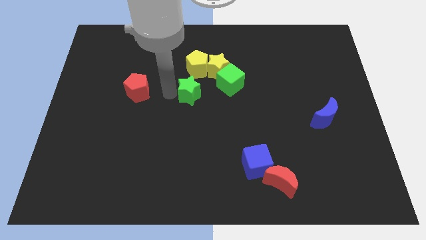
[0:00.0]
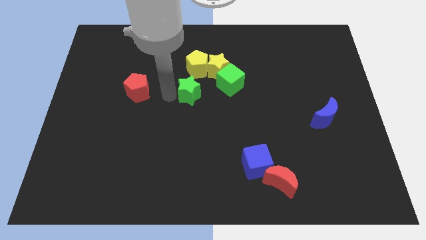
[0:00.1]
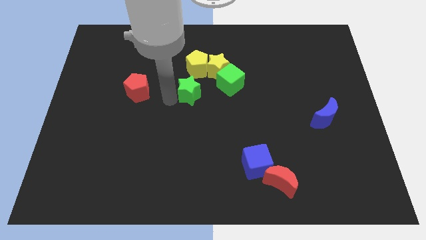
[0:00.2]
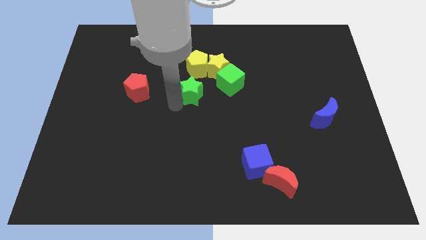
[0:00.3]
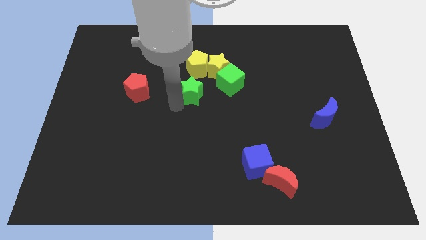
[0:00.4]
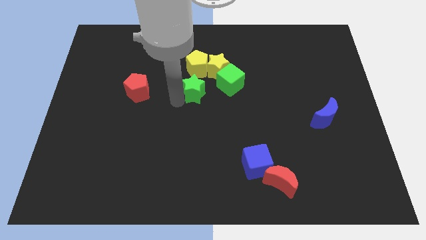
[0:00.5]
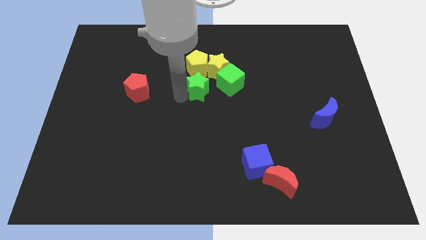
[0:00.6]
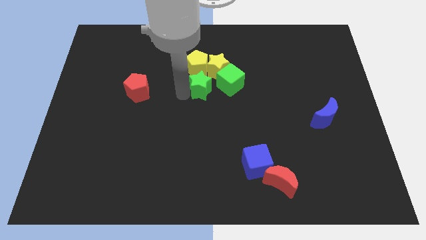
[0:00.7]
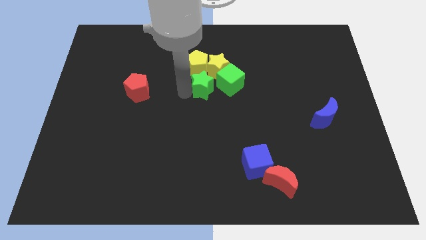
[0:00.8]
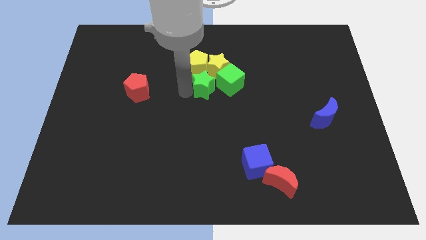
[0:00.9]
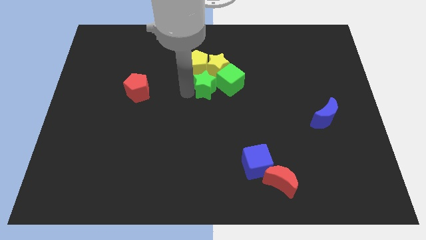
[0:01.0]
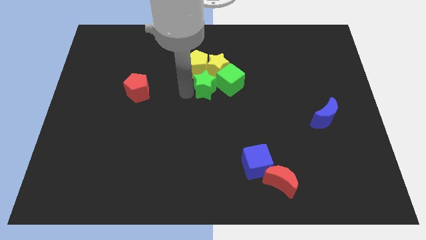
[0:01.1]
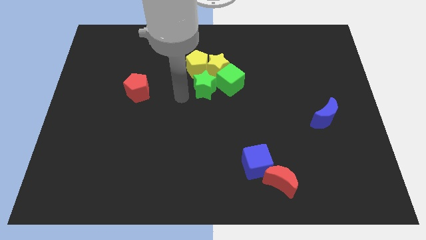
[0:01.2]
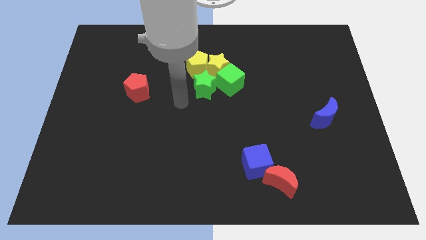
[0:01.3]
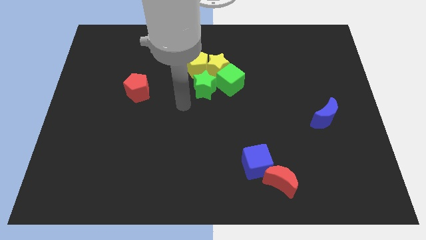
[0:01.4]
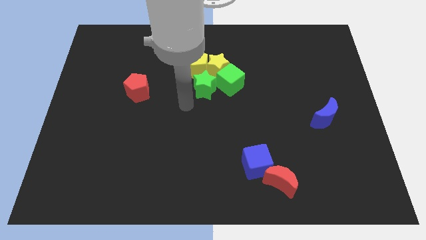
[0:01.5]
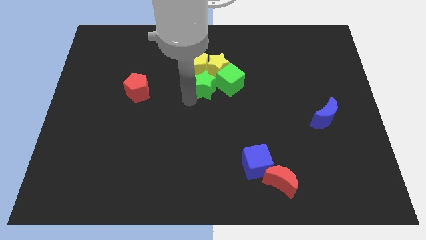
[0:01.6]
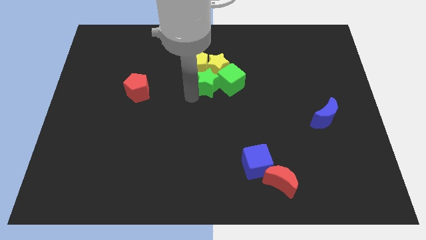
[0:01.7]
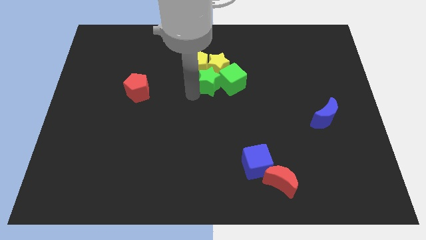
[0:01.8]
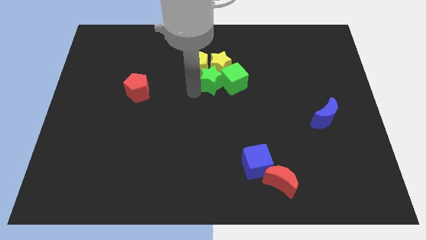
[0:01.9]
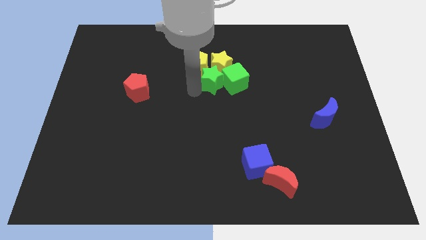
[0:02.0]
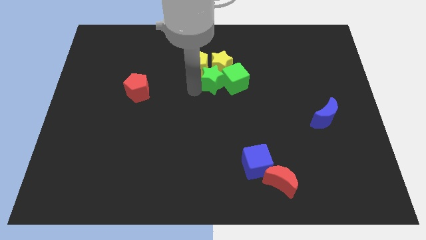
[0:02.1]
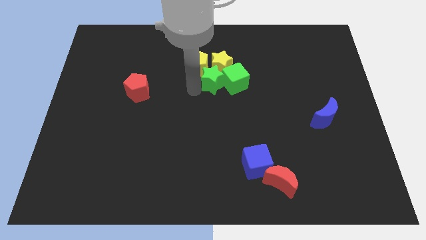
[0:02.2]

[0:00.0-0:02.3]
move the green star to the left side of the green cube

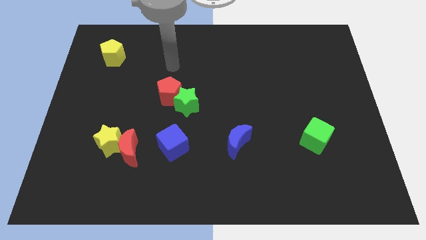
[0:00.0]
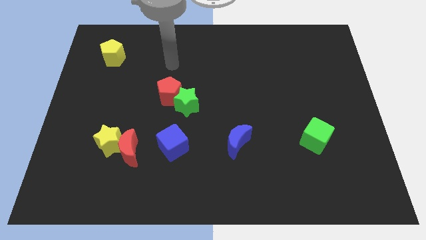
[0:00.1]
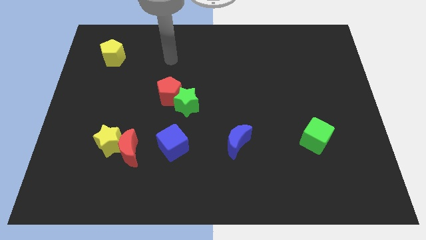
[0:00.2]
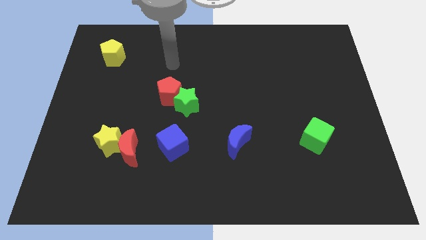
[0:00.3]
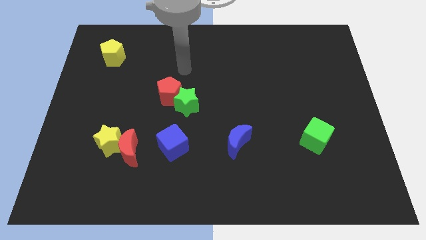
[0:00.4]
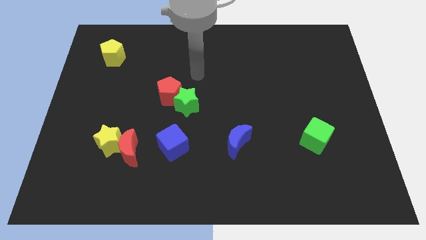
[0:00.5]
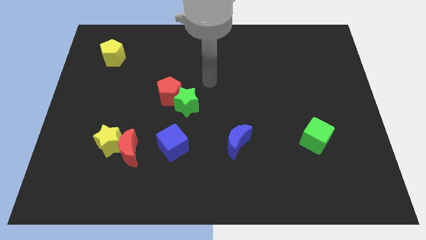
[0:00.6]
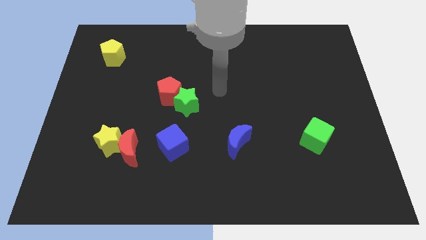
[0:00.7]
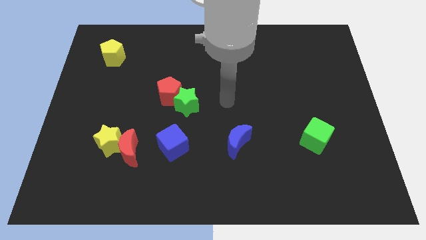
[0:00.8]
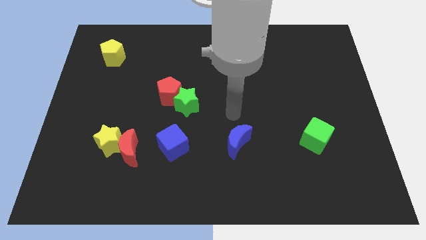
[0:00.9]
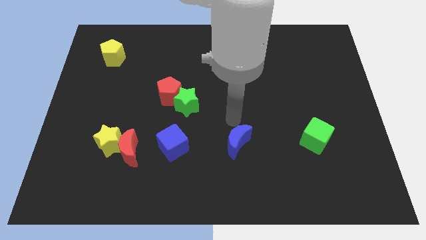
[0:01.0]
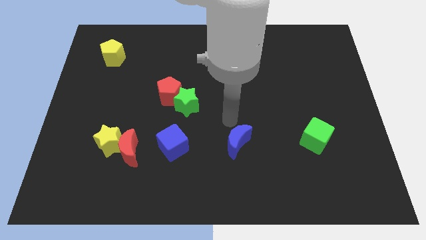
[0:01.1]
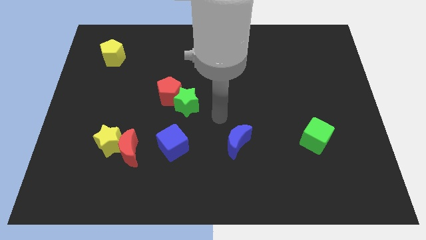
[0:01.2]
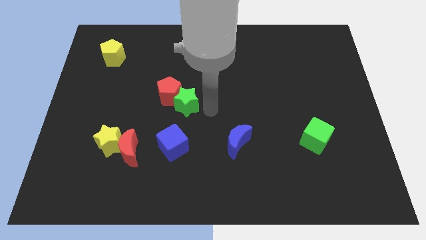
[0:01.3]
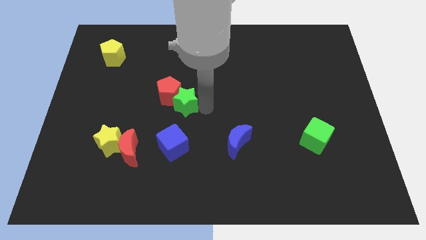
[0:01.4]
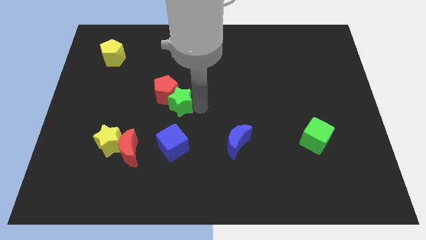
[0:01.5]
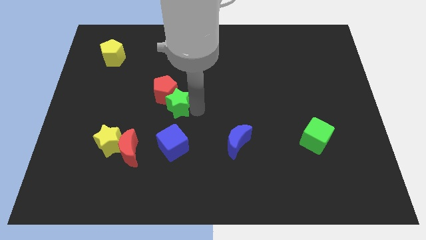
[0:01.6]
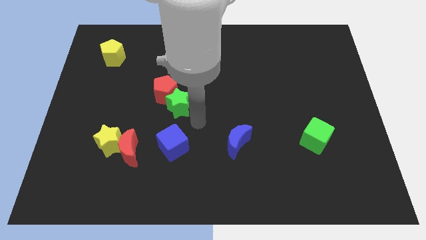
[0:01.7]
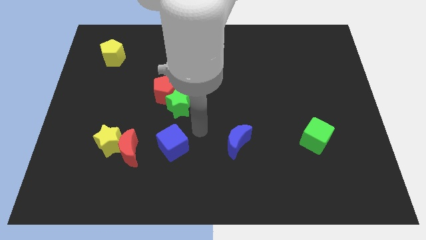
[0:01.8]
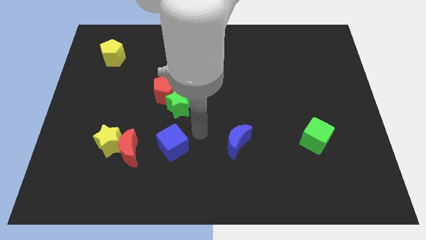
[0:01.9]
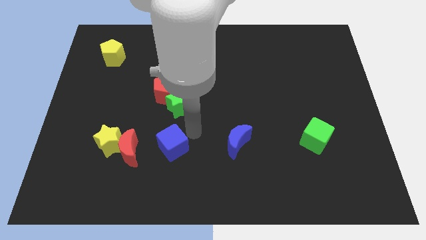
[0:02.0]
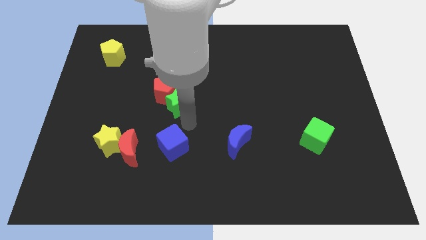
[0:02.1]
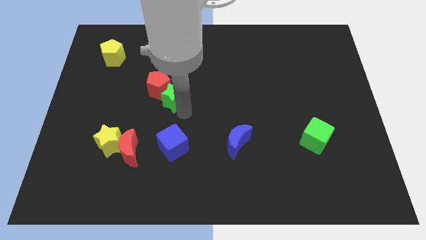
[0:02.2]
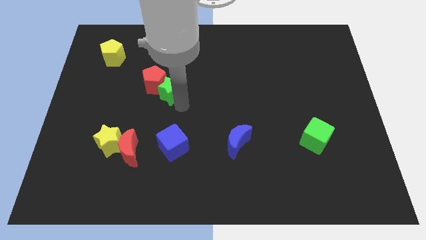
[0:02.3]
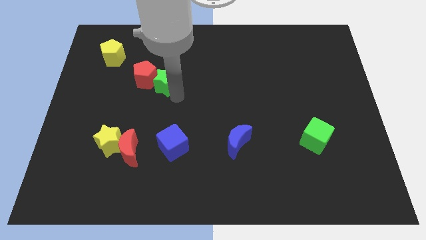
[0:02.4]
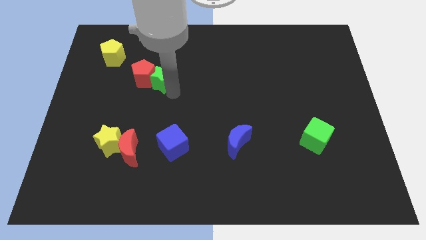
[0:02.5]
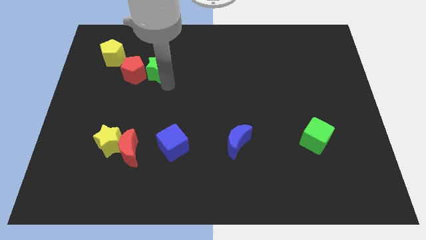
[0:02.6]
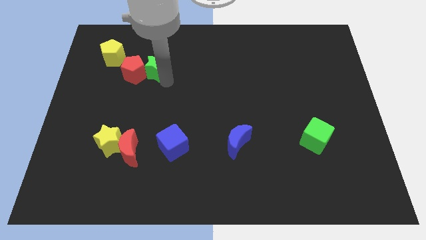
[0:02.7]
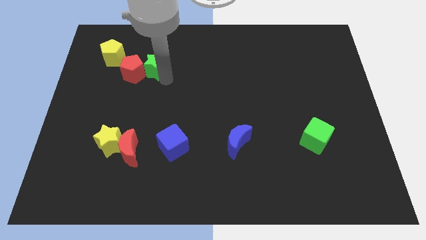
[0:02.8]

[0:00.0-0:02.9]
move the green star along with the red pentagon towards the bottom of the yellow pentagon

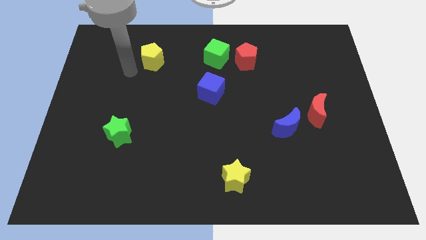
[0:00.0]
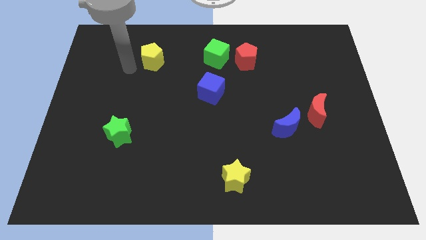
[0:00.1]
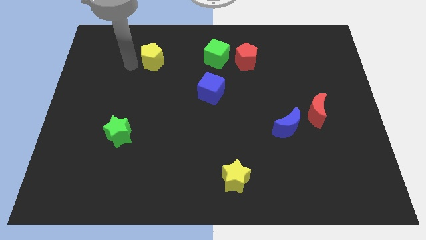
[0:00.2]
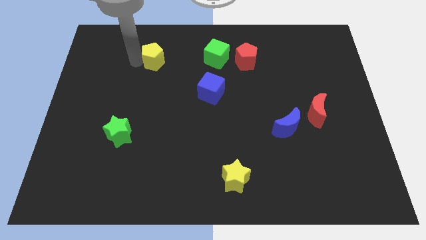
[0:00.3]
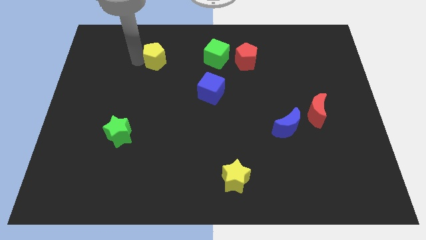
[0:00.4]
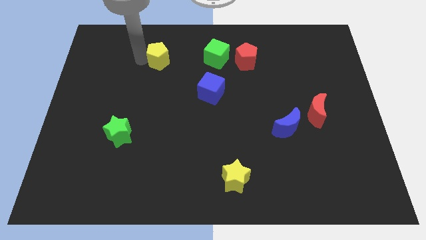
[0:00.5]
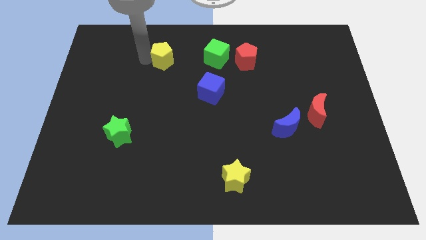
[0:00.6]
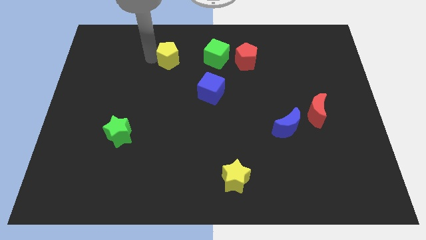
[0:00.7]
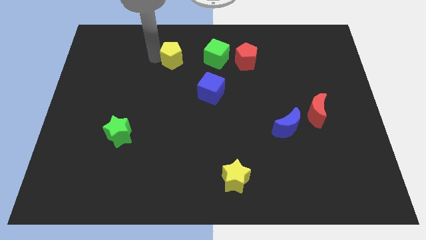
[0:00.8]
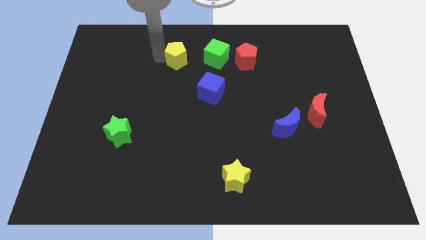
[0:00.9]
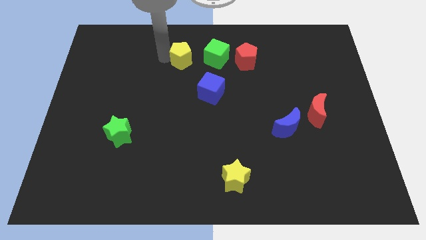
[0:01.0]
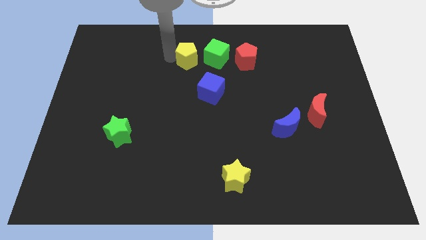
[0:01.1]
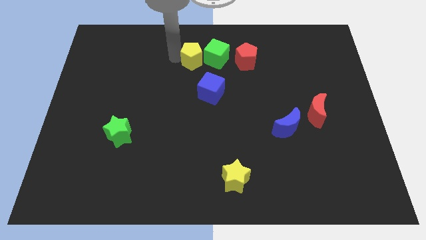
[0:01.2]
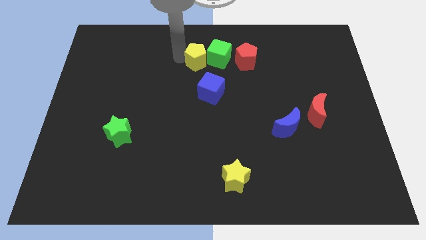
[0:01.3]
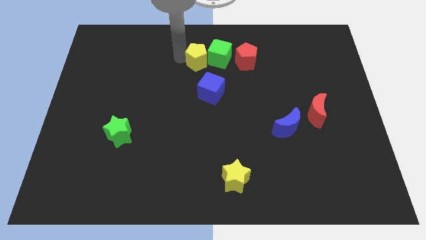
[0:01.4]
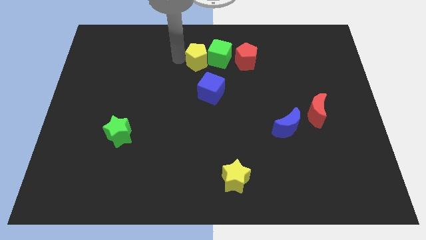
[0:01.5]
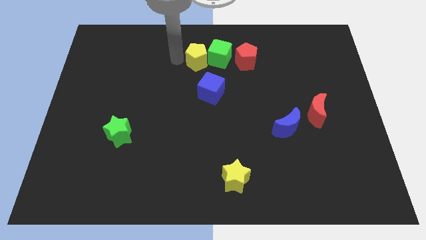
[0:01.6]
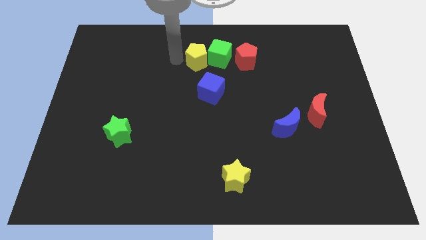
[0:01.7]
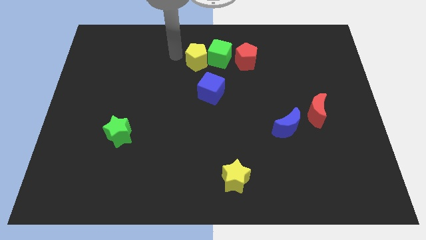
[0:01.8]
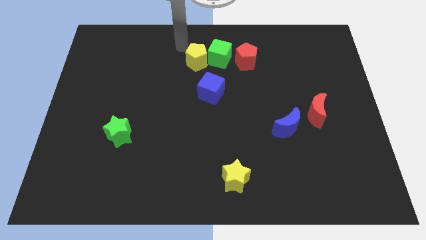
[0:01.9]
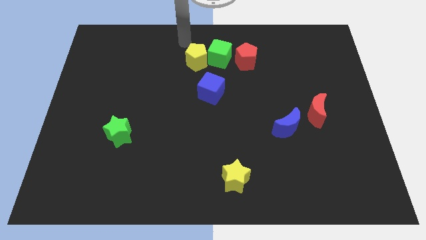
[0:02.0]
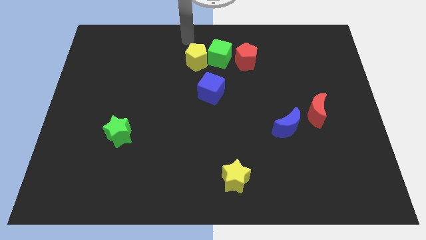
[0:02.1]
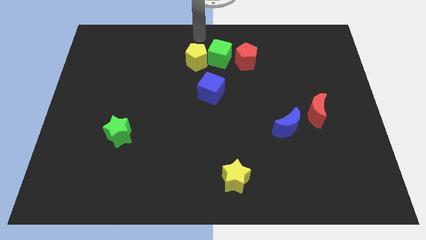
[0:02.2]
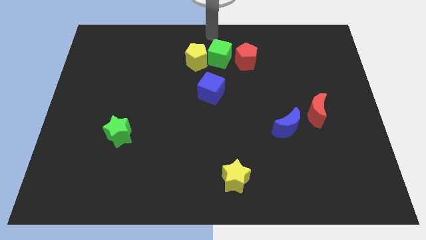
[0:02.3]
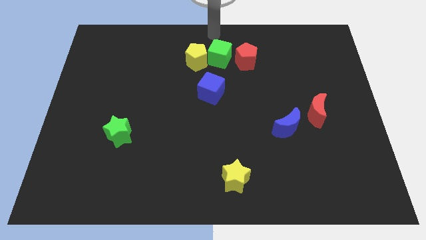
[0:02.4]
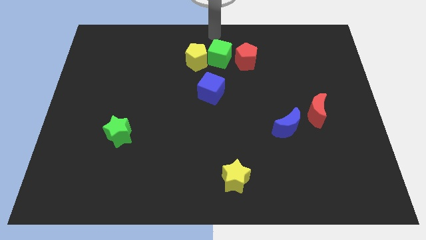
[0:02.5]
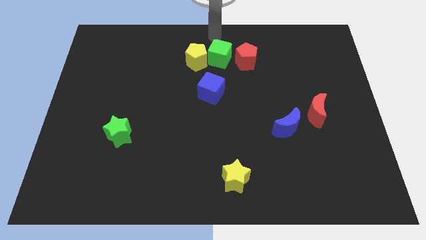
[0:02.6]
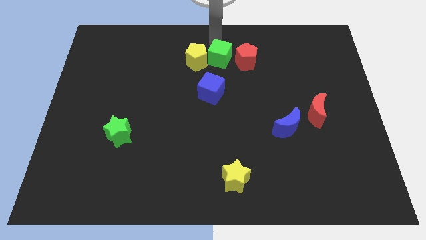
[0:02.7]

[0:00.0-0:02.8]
push the yellow pentagon into green cube

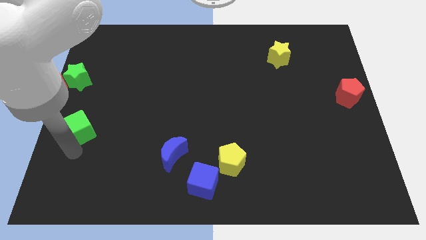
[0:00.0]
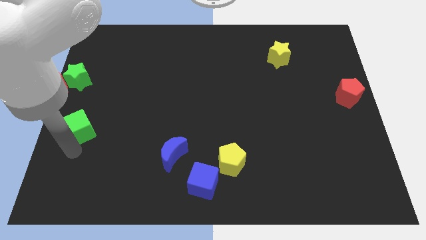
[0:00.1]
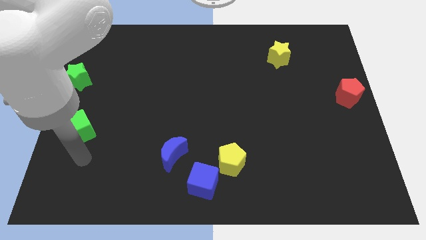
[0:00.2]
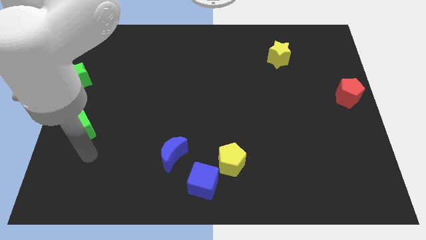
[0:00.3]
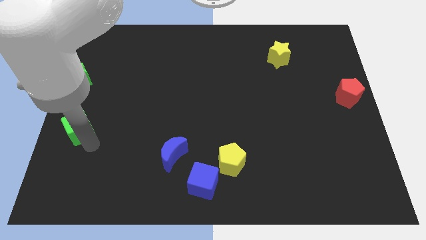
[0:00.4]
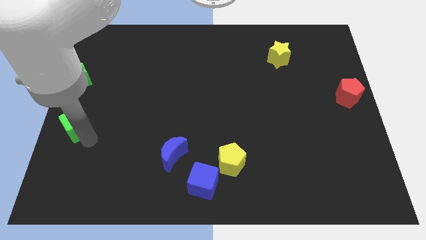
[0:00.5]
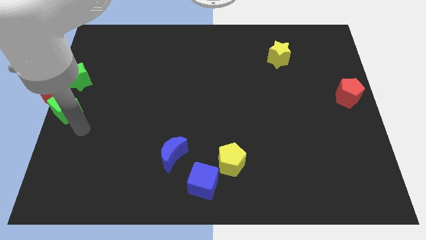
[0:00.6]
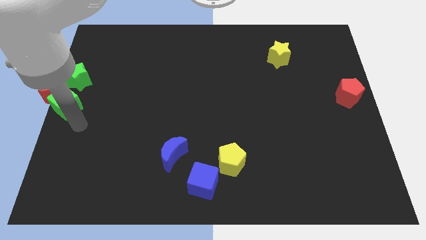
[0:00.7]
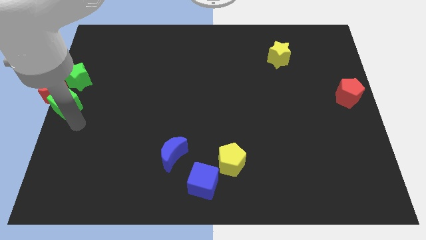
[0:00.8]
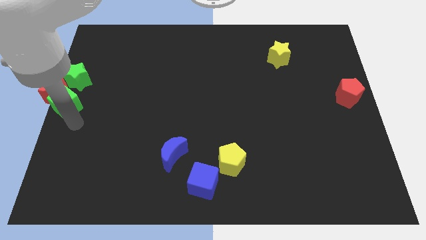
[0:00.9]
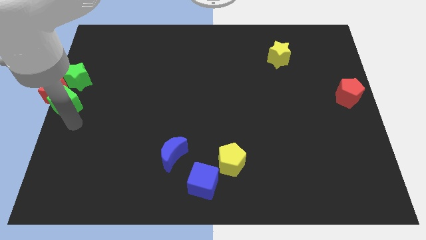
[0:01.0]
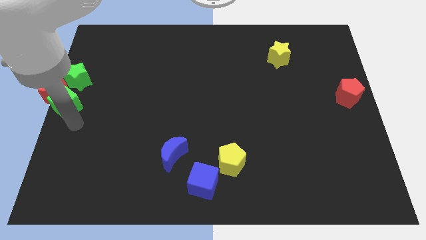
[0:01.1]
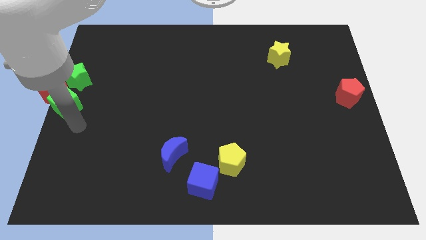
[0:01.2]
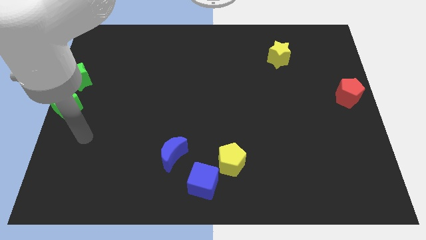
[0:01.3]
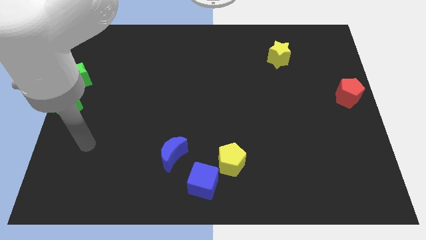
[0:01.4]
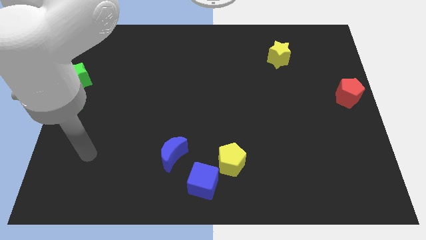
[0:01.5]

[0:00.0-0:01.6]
put the green cube into the red moon
